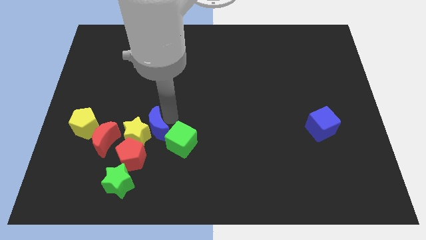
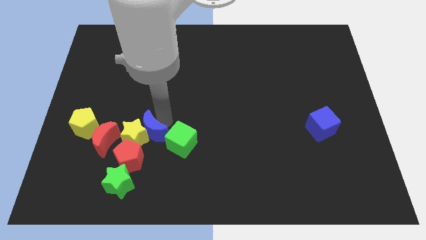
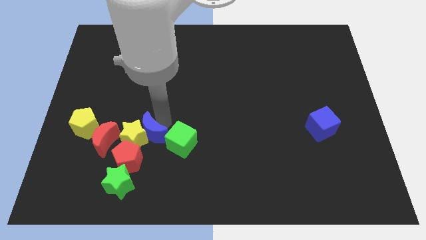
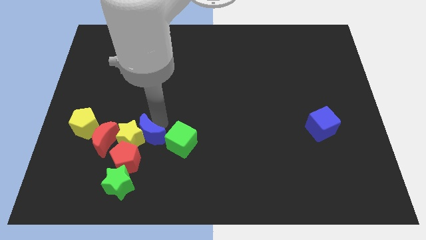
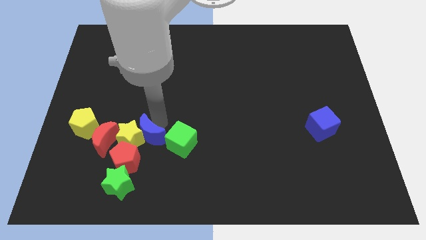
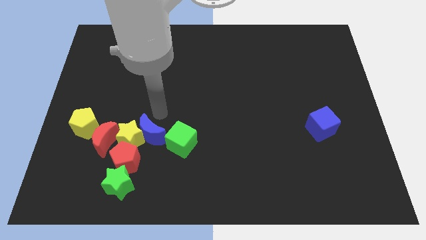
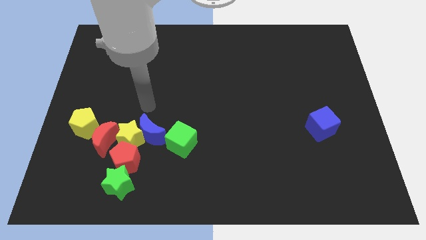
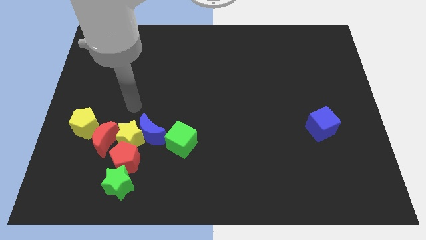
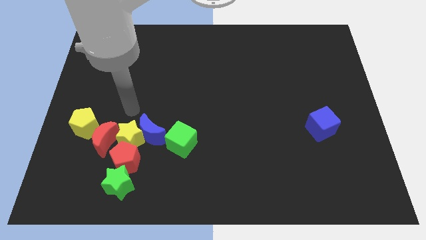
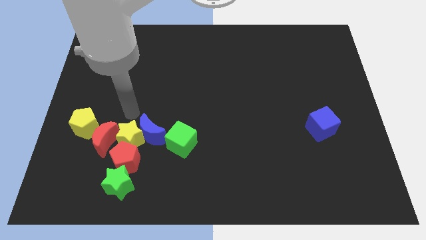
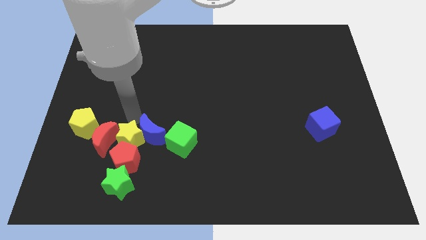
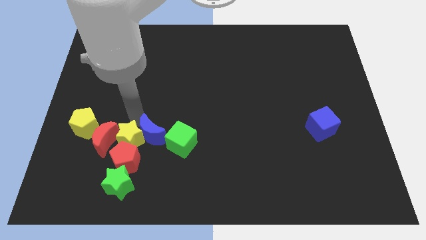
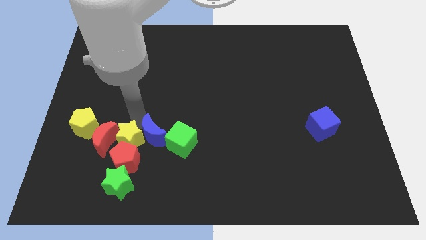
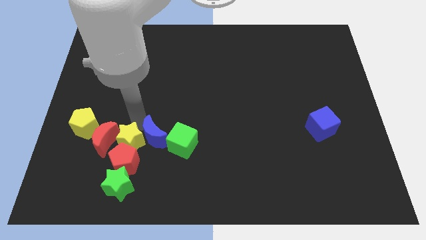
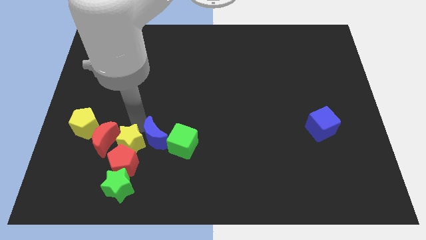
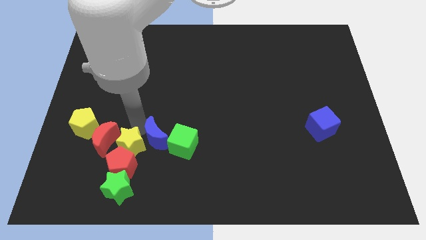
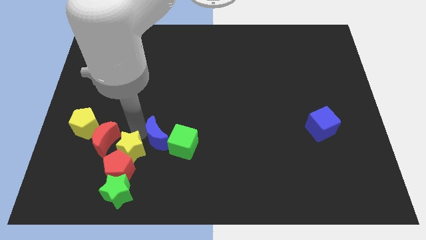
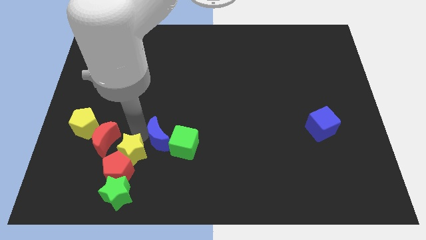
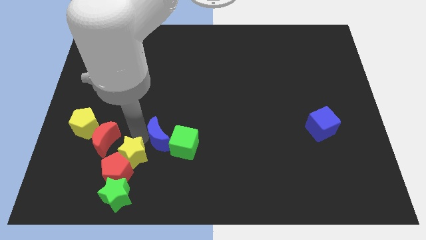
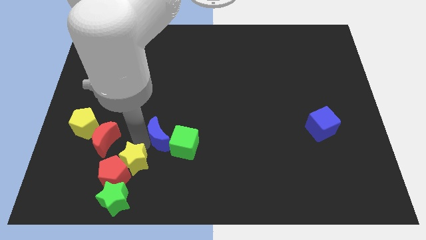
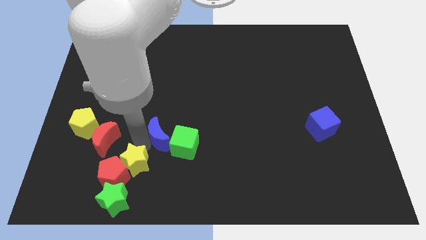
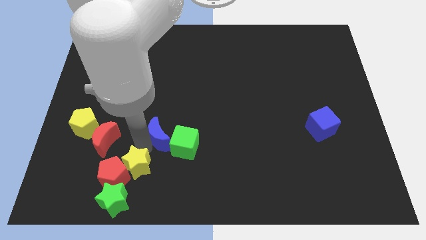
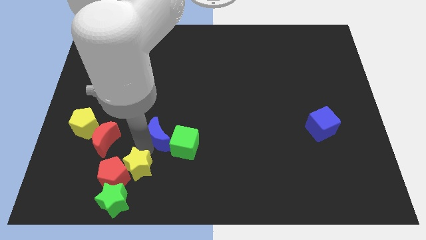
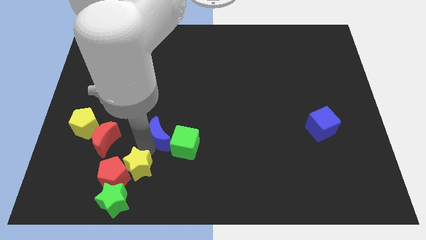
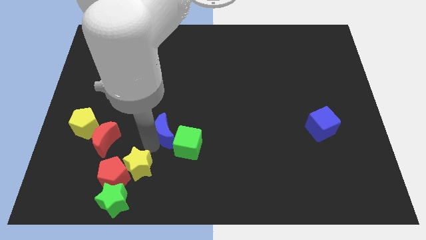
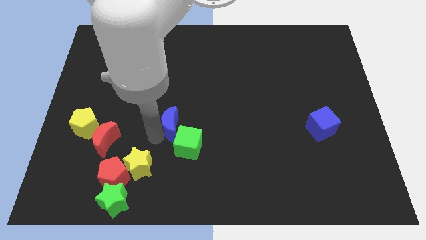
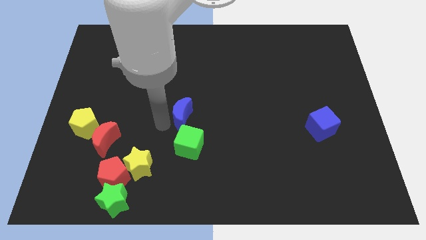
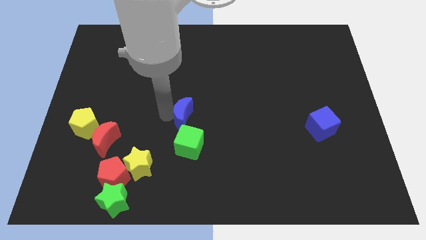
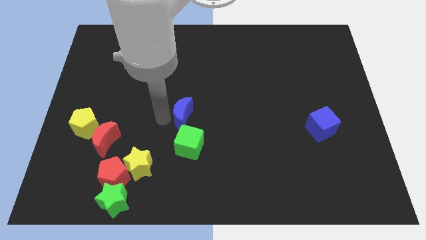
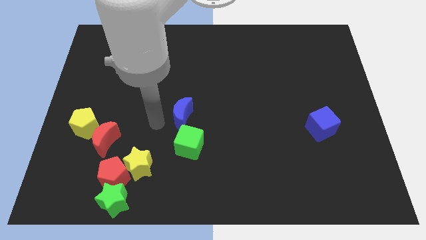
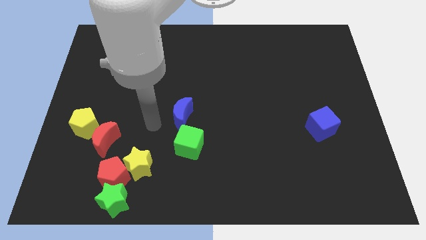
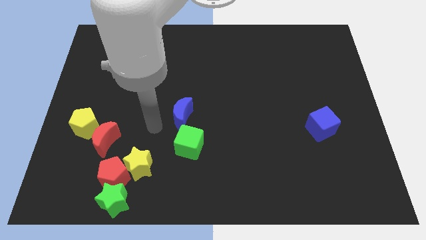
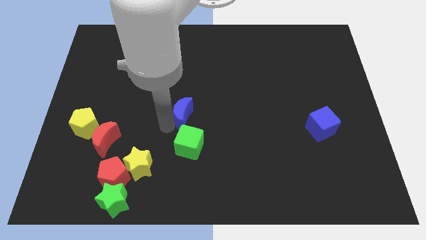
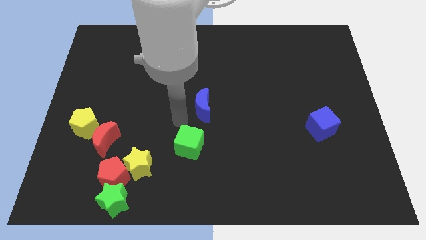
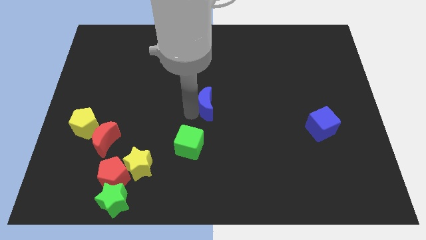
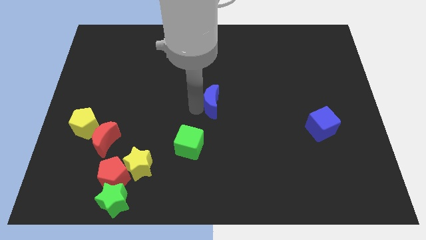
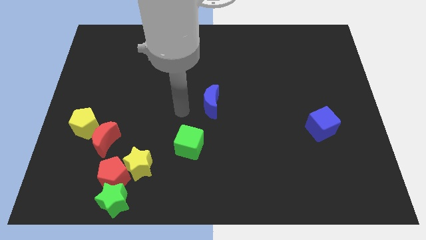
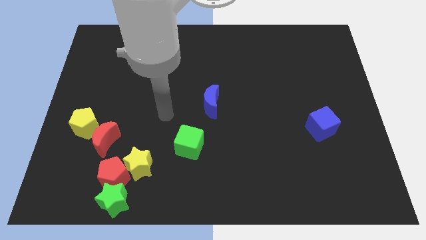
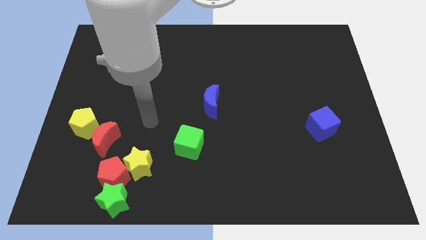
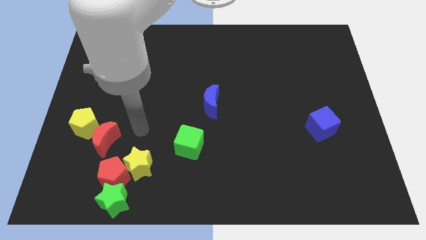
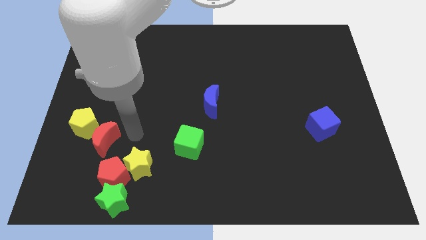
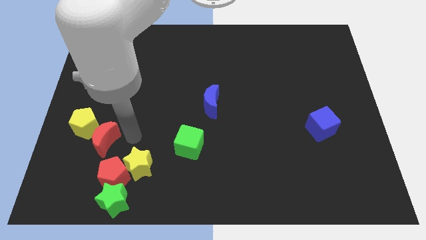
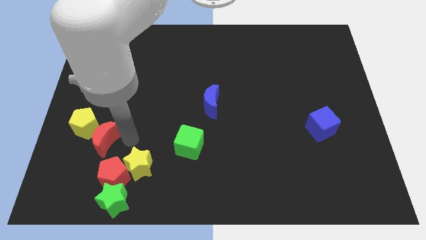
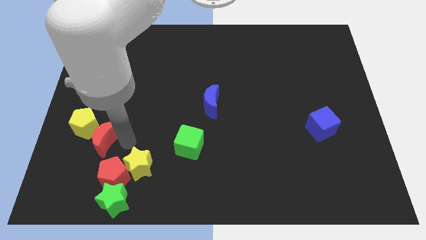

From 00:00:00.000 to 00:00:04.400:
place the blue moon at the center of the board

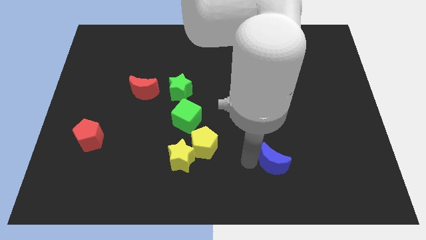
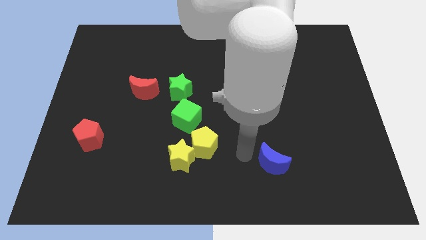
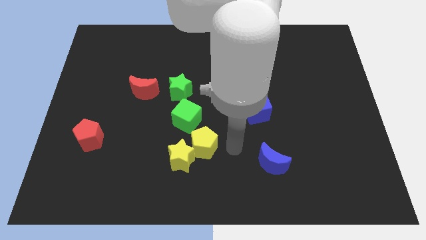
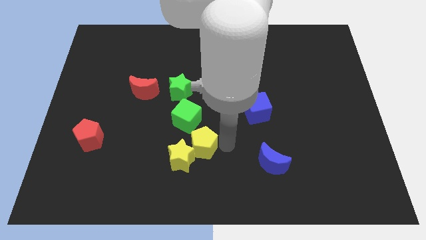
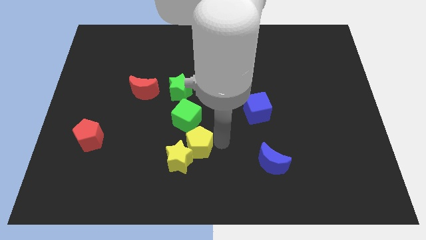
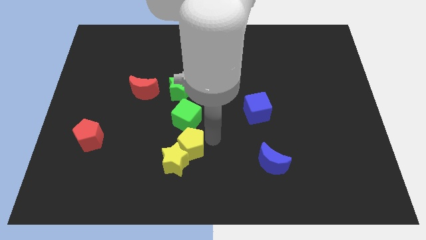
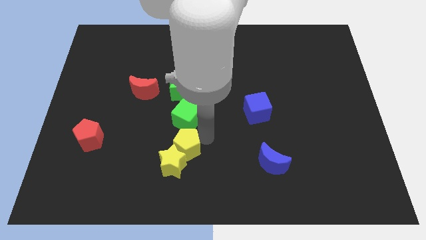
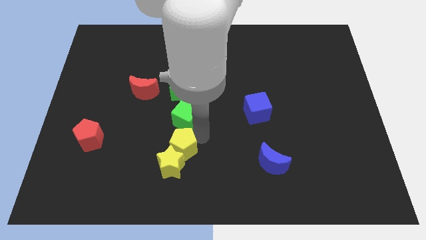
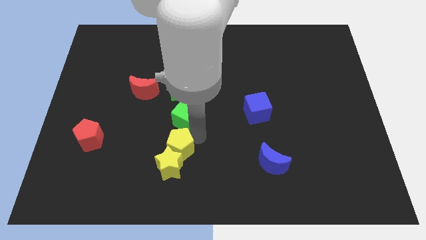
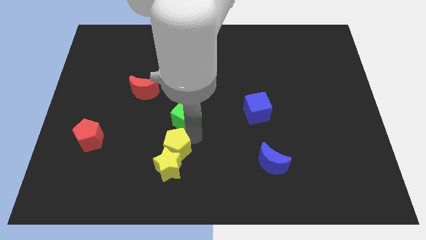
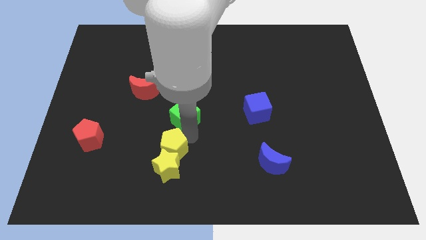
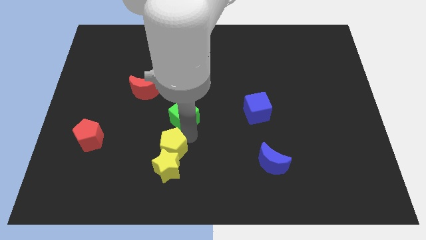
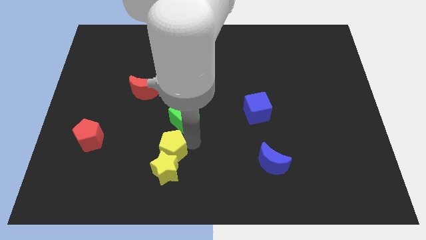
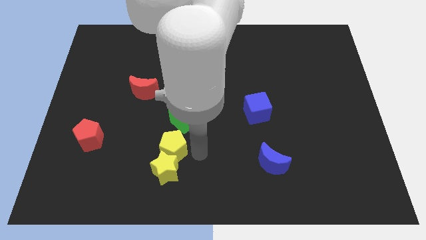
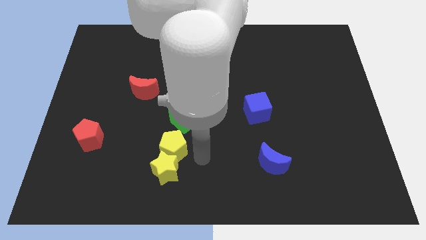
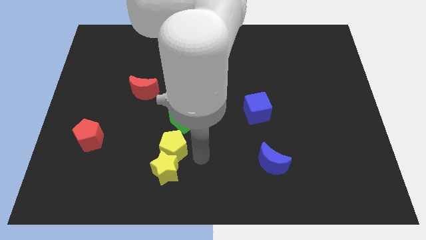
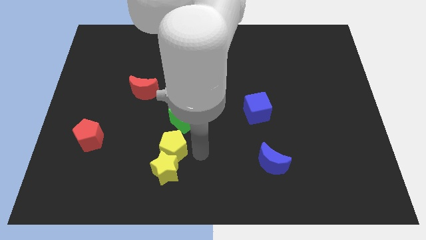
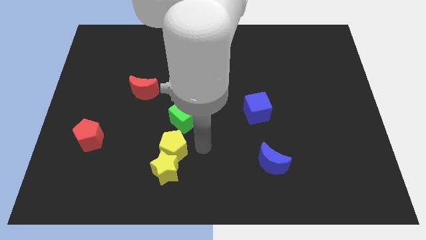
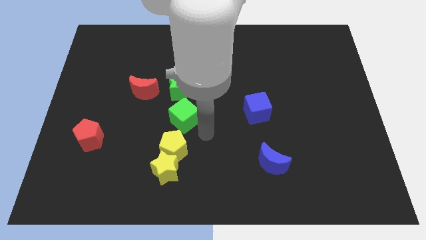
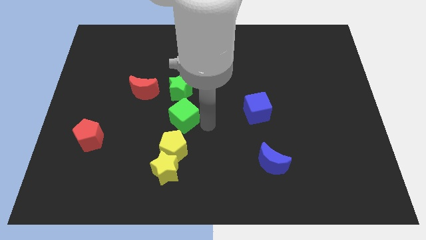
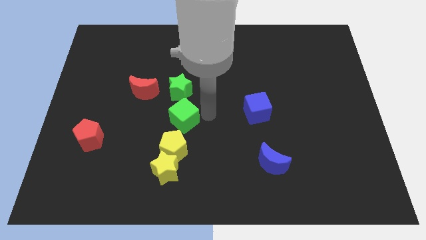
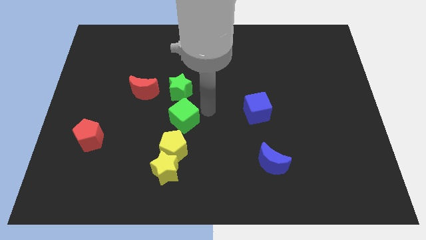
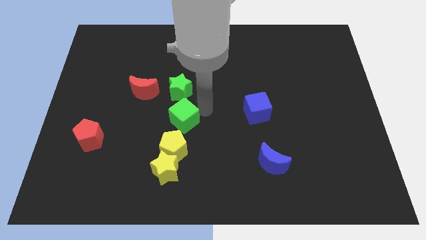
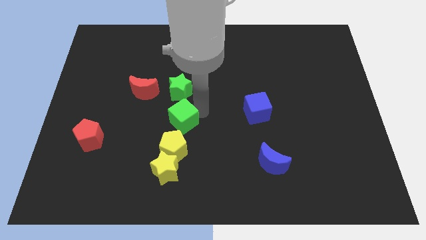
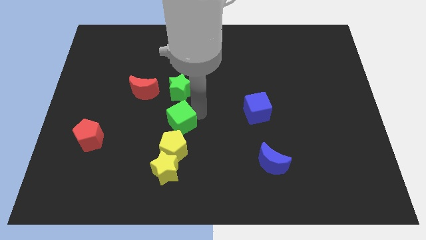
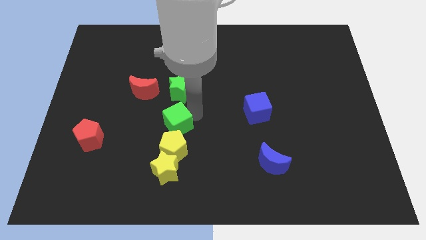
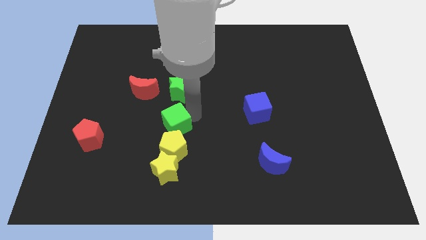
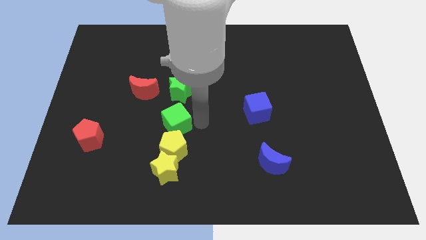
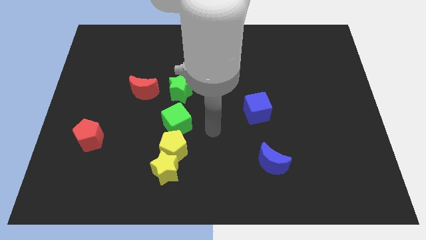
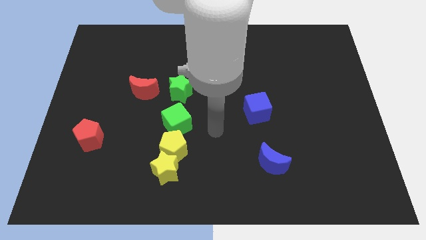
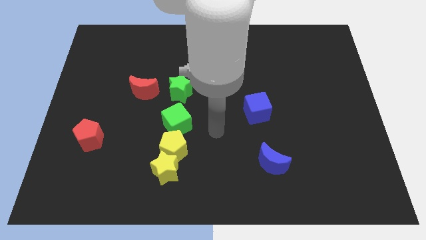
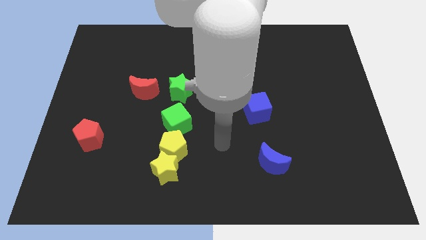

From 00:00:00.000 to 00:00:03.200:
place the yellow blocks below the green cube

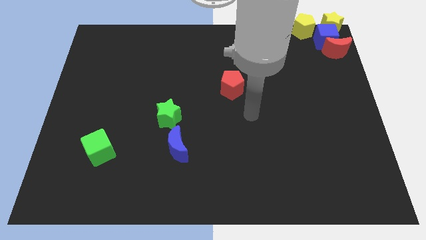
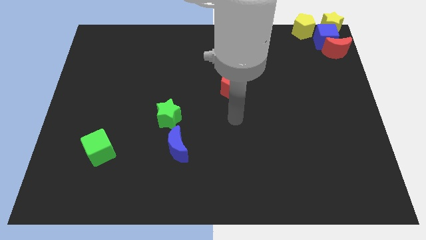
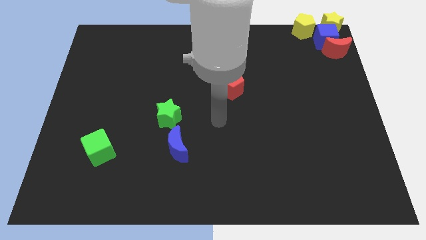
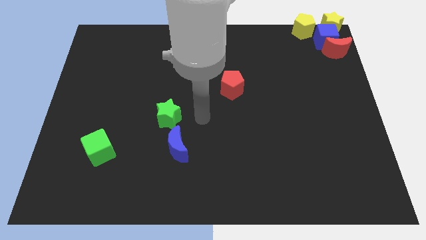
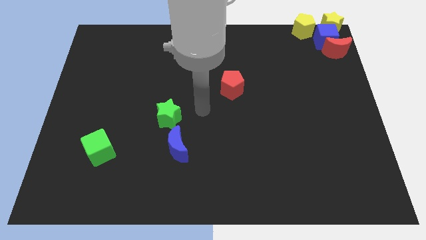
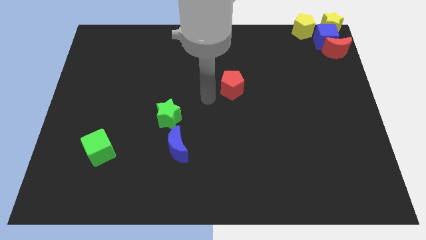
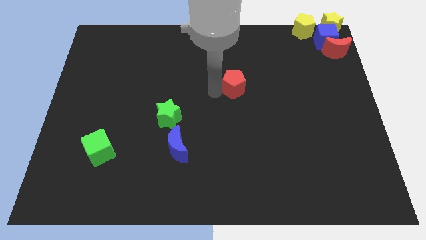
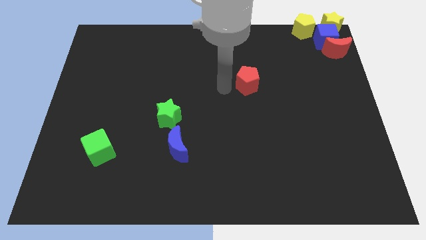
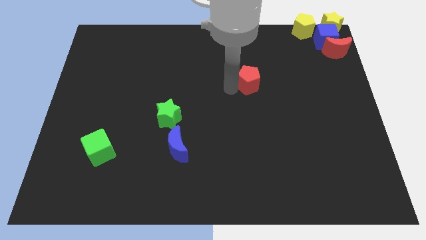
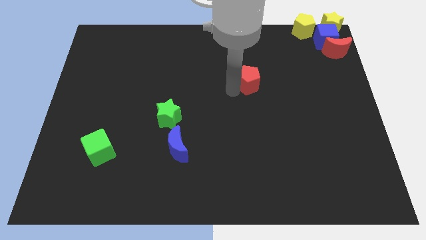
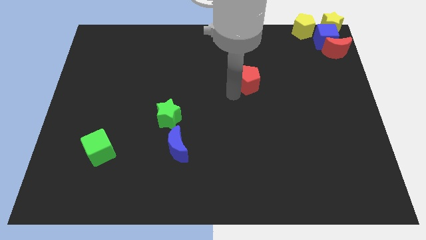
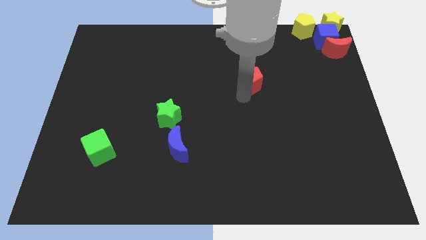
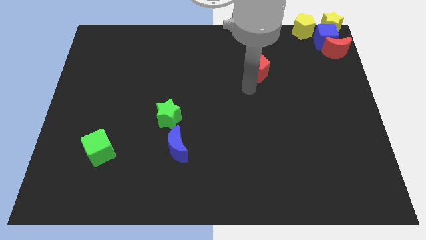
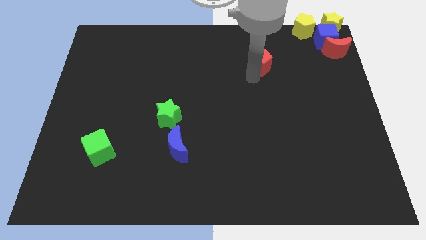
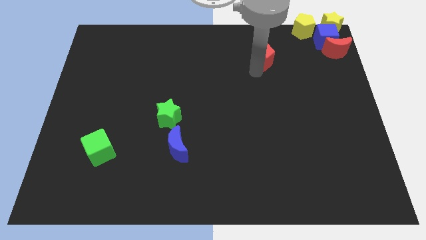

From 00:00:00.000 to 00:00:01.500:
push the red pentagon towards top side of the board
